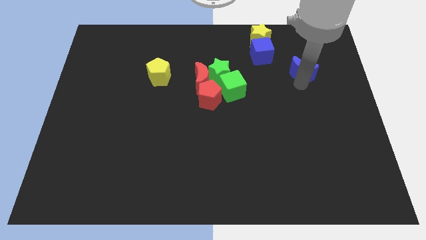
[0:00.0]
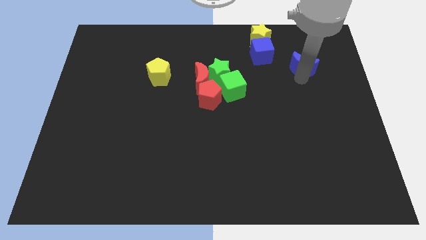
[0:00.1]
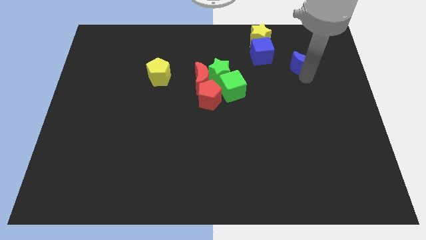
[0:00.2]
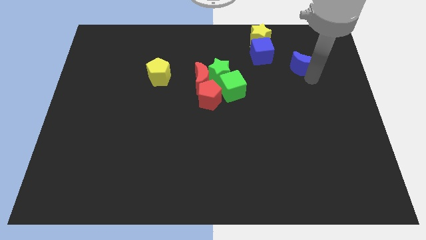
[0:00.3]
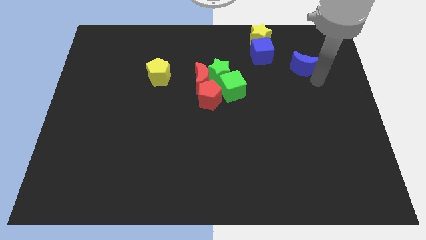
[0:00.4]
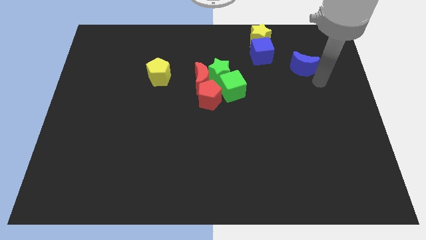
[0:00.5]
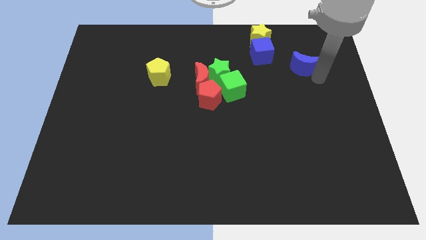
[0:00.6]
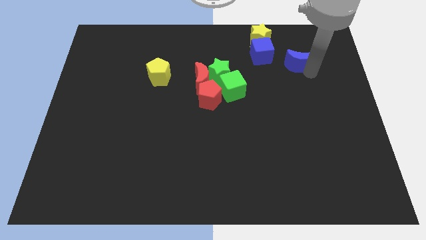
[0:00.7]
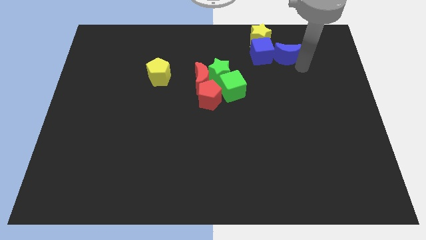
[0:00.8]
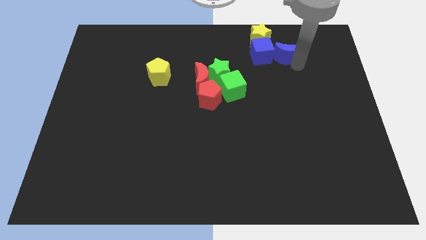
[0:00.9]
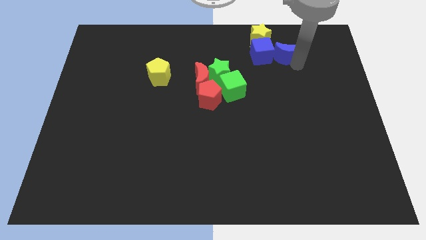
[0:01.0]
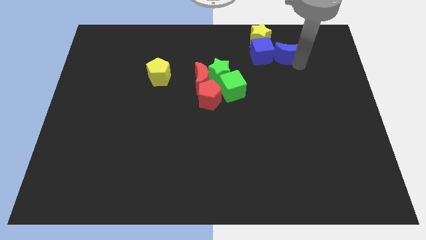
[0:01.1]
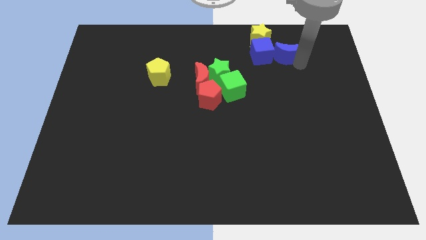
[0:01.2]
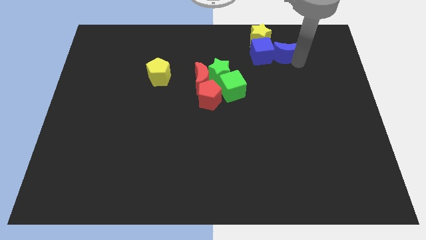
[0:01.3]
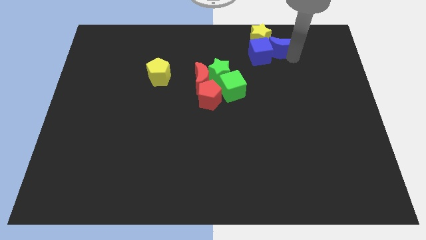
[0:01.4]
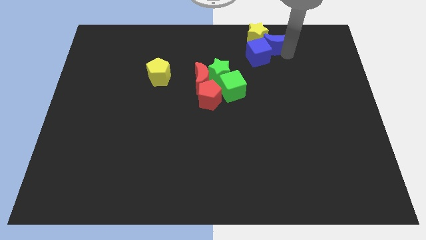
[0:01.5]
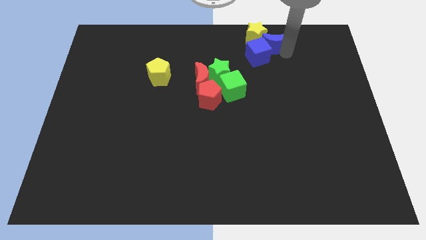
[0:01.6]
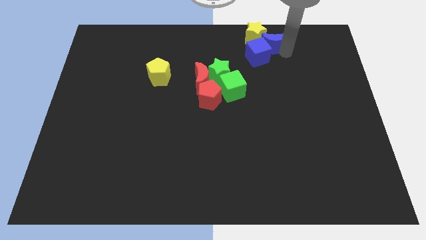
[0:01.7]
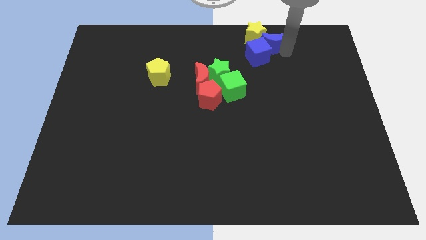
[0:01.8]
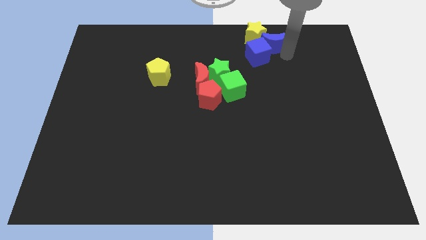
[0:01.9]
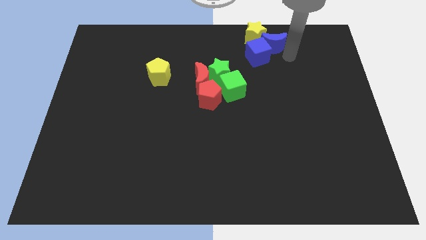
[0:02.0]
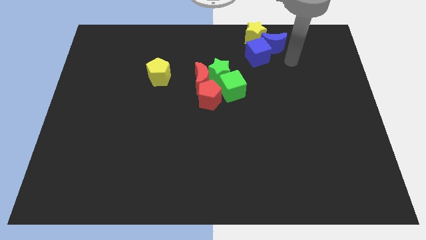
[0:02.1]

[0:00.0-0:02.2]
push blue moon into the yellow star and blue cube

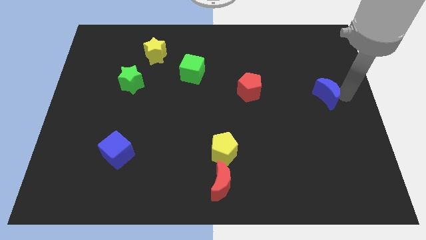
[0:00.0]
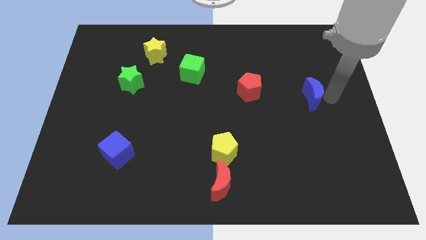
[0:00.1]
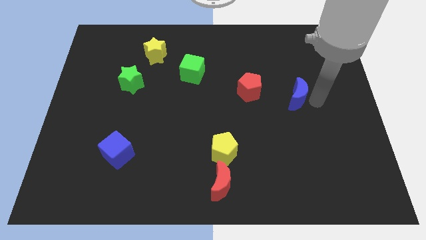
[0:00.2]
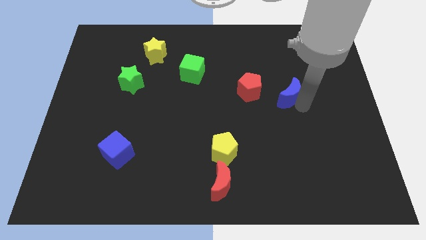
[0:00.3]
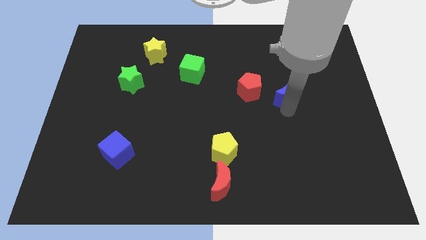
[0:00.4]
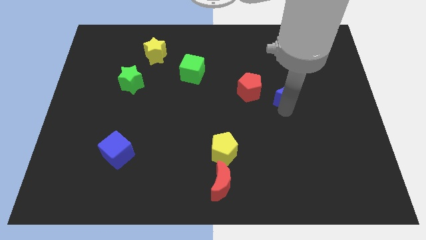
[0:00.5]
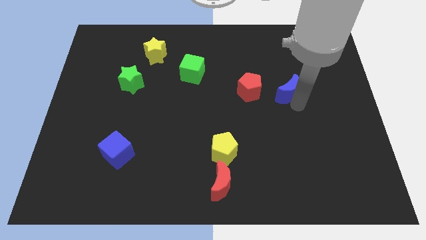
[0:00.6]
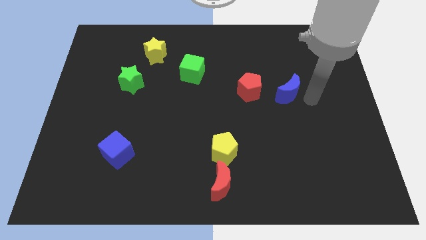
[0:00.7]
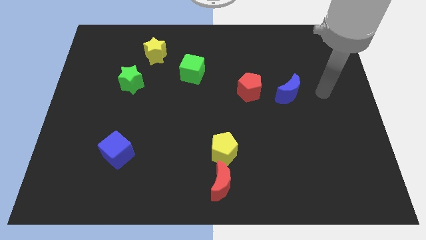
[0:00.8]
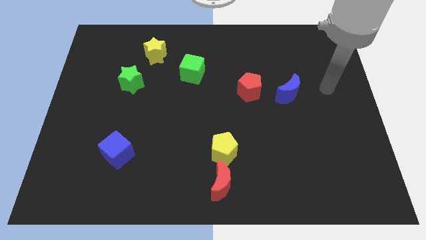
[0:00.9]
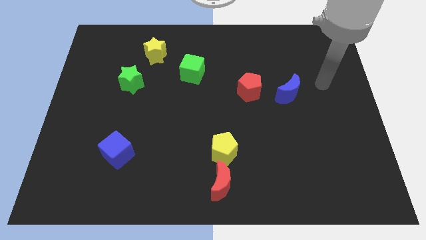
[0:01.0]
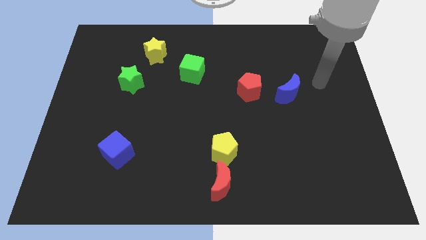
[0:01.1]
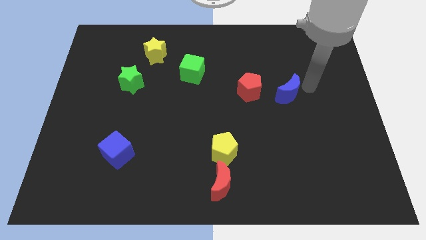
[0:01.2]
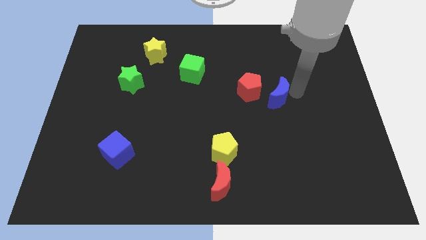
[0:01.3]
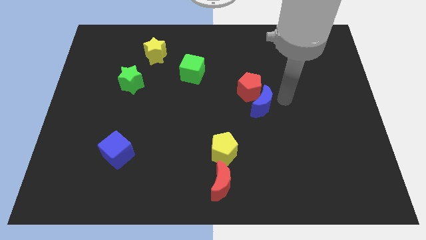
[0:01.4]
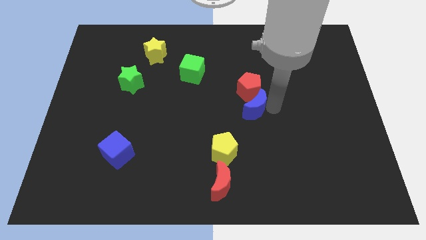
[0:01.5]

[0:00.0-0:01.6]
move the blue moon into the red pentagon

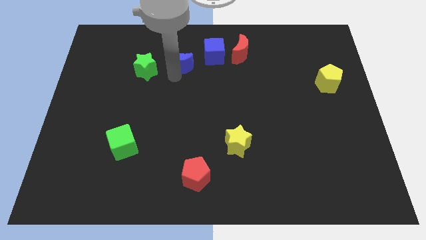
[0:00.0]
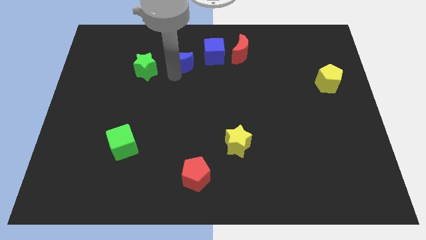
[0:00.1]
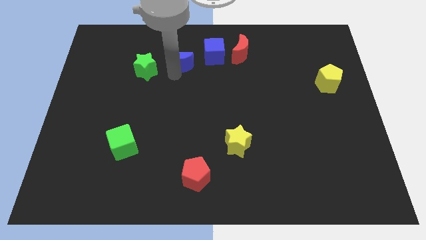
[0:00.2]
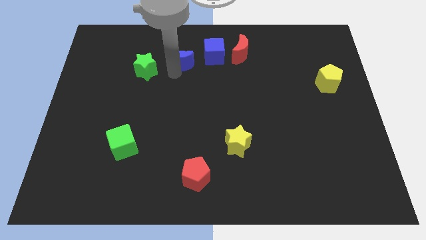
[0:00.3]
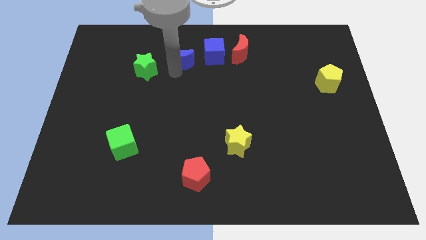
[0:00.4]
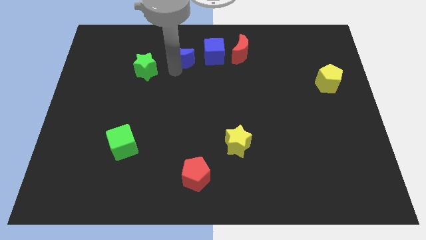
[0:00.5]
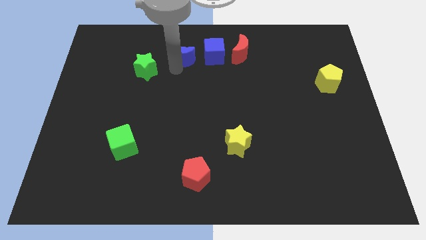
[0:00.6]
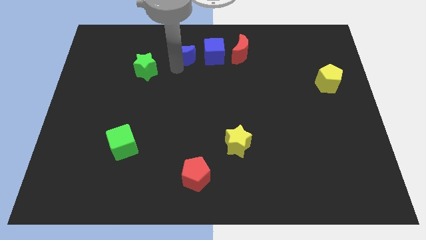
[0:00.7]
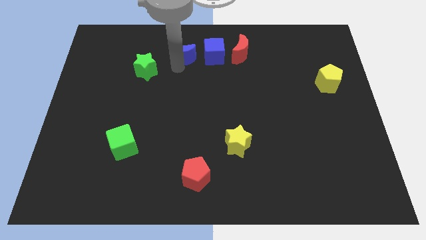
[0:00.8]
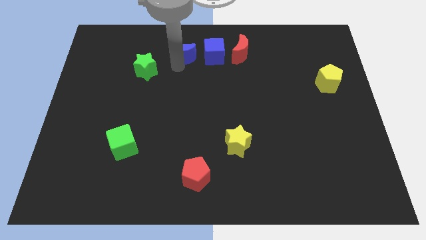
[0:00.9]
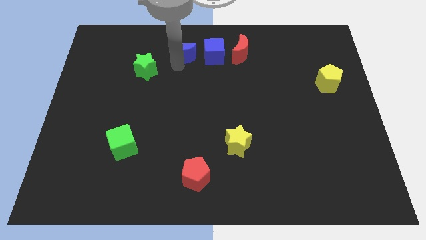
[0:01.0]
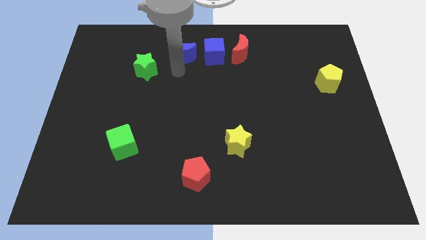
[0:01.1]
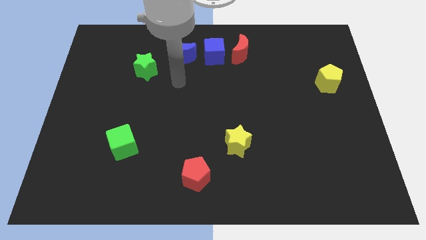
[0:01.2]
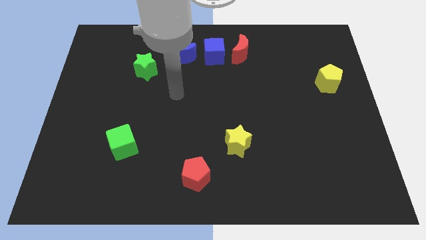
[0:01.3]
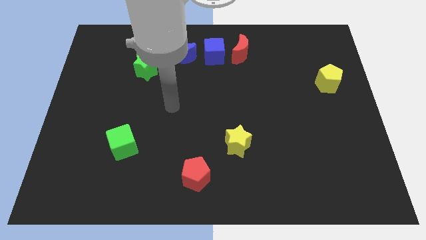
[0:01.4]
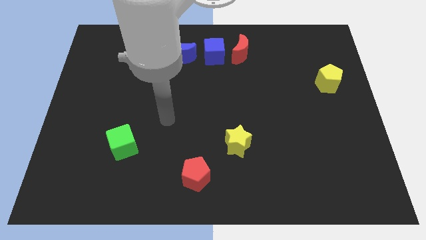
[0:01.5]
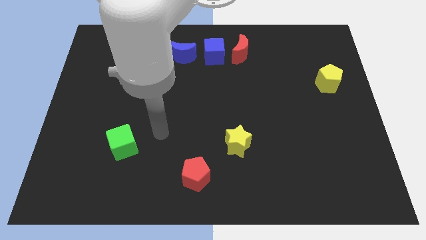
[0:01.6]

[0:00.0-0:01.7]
put the blue moon left to the blue cube

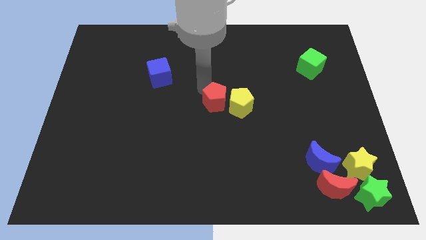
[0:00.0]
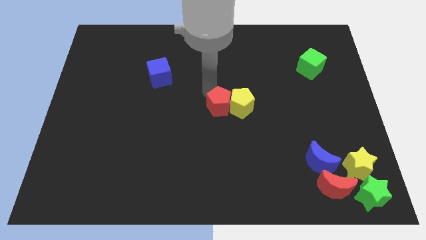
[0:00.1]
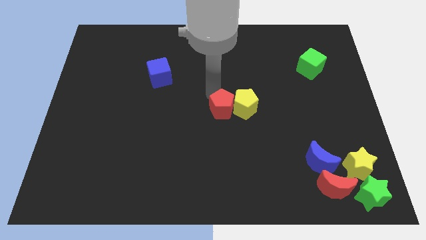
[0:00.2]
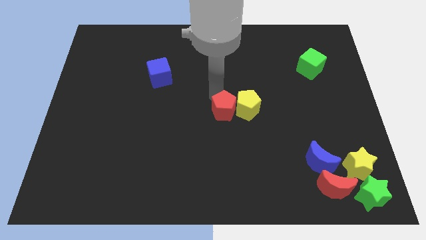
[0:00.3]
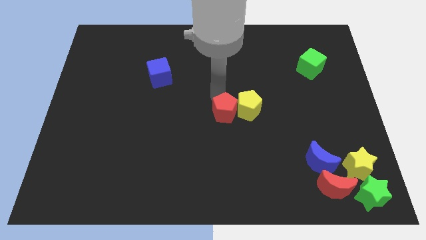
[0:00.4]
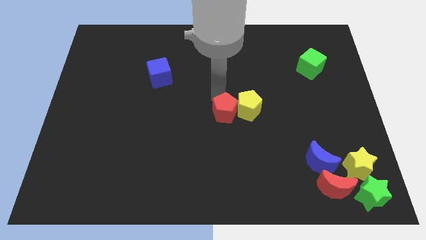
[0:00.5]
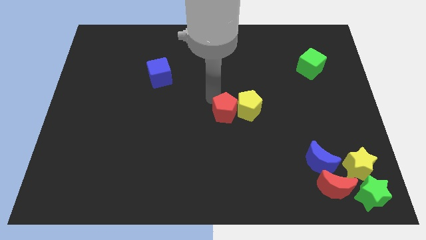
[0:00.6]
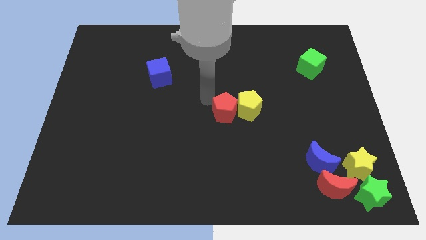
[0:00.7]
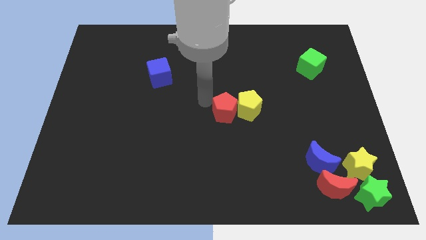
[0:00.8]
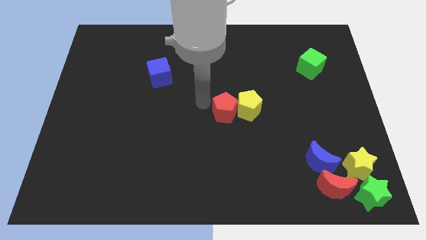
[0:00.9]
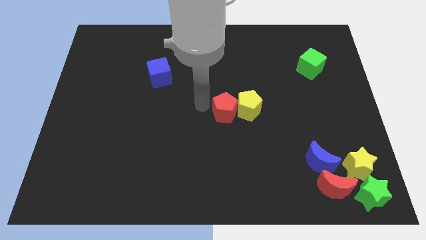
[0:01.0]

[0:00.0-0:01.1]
move red pentagon into yellow pentagon

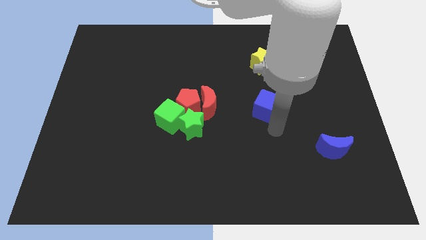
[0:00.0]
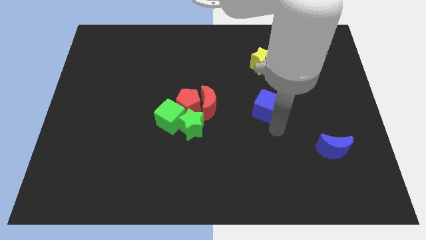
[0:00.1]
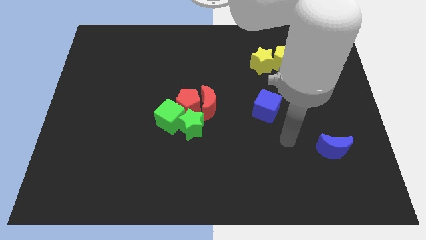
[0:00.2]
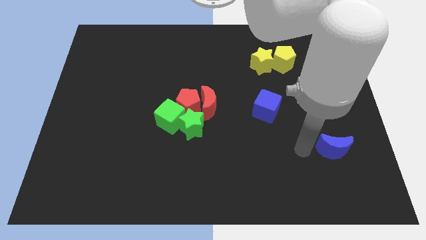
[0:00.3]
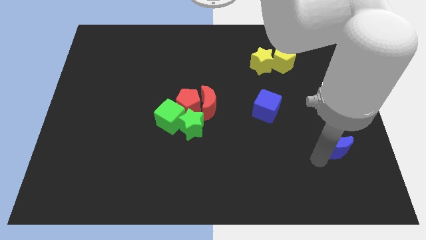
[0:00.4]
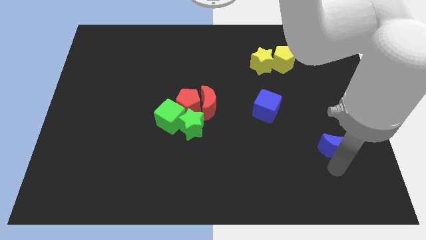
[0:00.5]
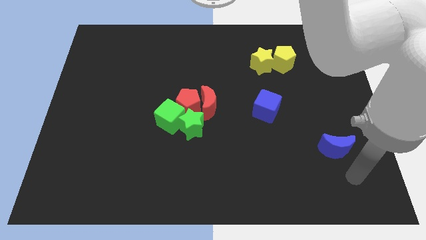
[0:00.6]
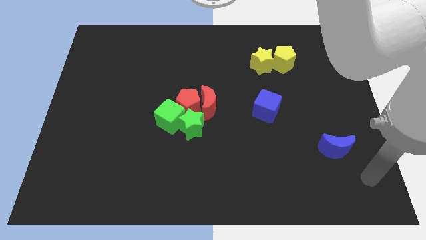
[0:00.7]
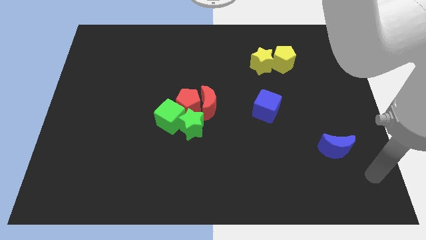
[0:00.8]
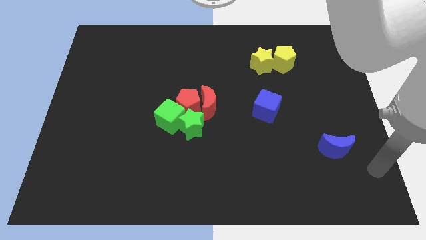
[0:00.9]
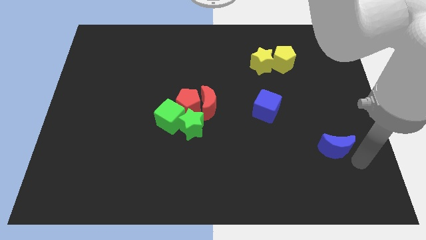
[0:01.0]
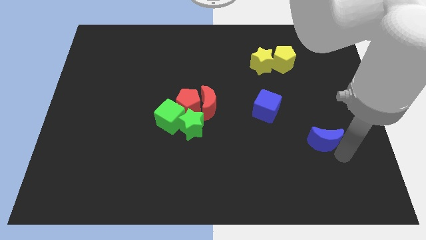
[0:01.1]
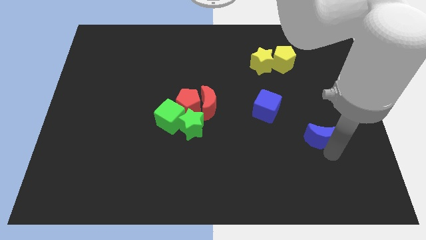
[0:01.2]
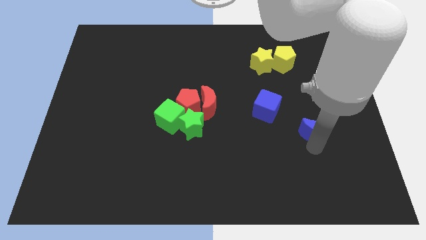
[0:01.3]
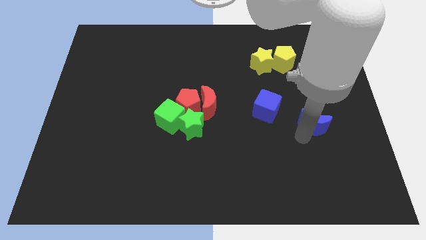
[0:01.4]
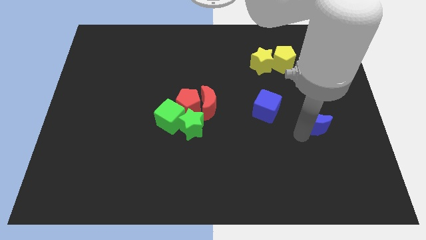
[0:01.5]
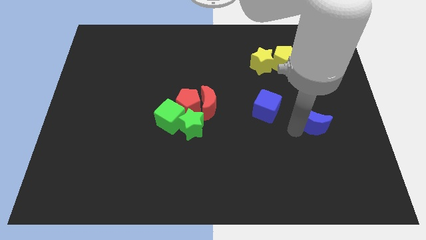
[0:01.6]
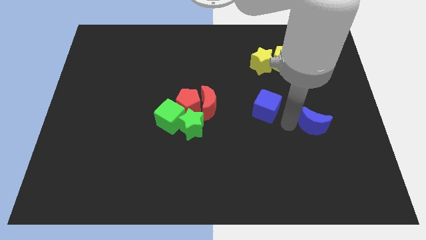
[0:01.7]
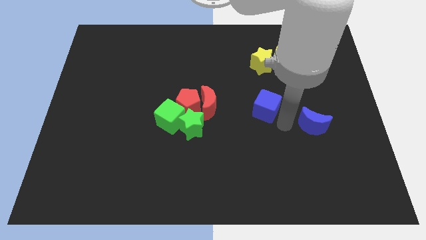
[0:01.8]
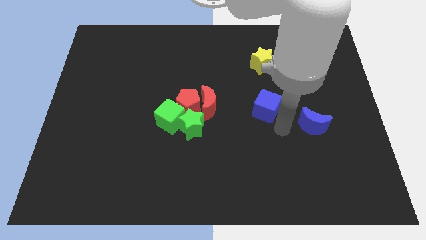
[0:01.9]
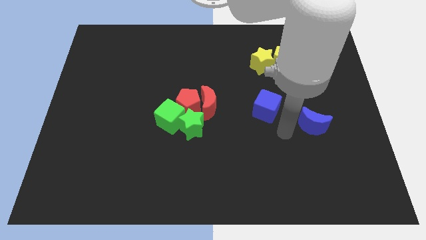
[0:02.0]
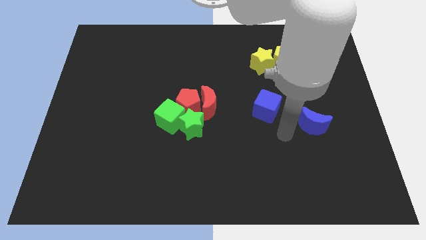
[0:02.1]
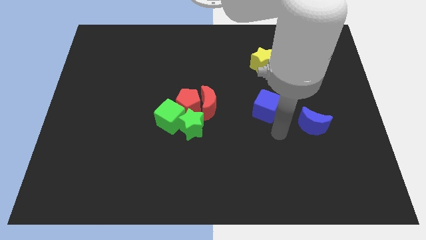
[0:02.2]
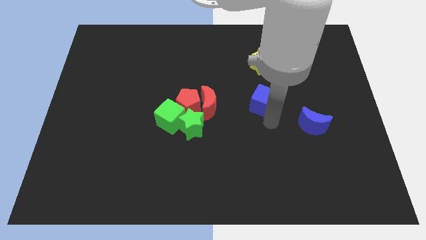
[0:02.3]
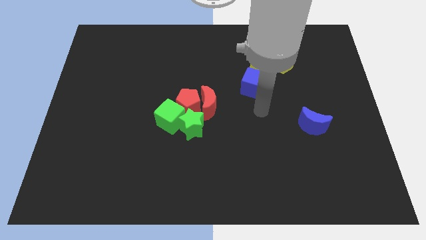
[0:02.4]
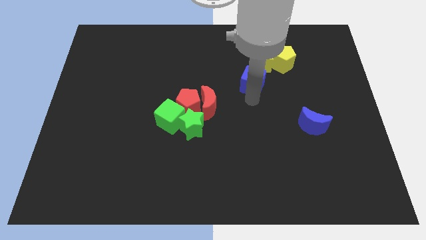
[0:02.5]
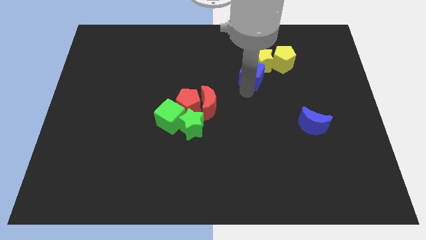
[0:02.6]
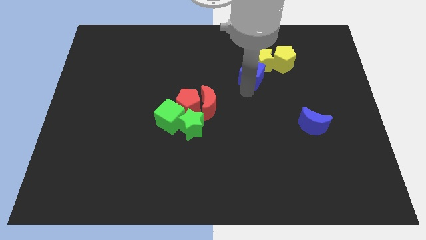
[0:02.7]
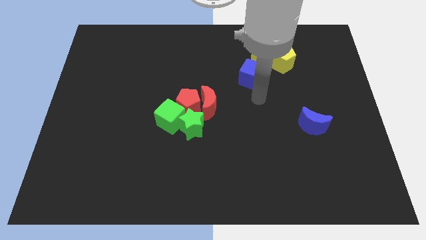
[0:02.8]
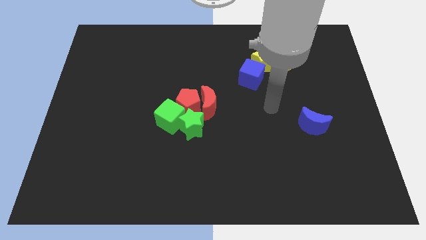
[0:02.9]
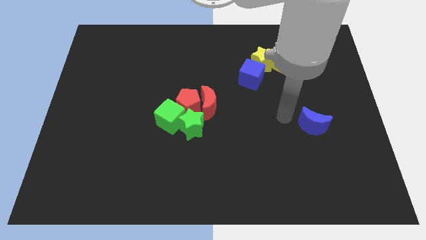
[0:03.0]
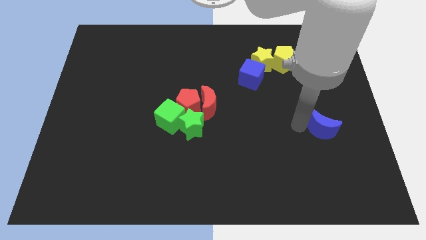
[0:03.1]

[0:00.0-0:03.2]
push the blue cube to the bottom left side of the yellow star
